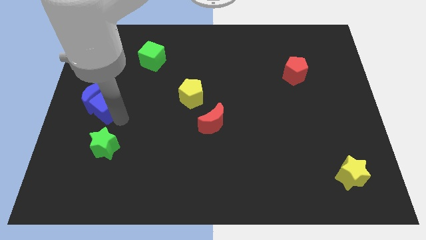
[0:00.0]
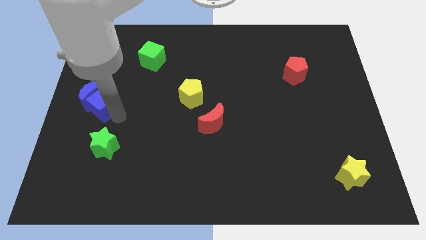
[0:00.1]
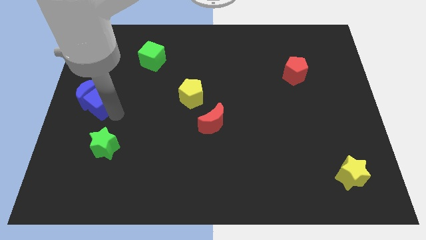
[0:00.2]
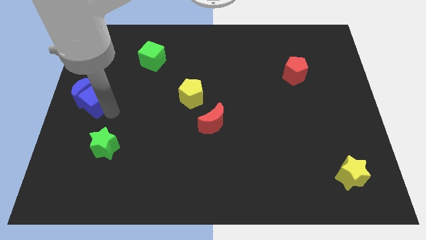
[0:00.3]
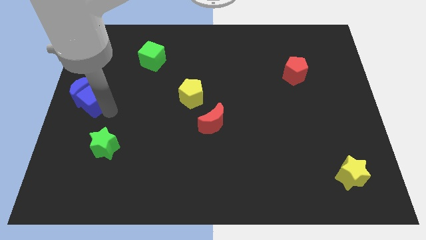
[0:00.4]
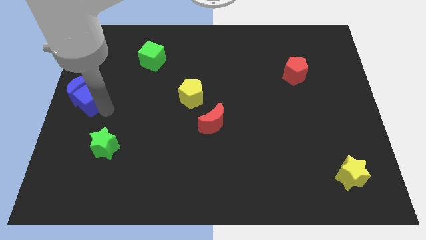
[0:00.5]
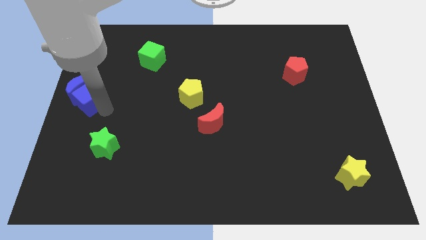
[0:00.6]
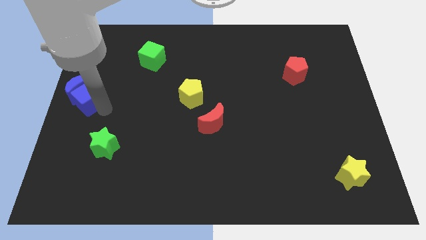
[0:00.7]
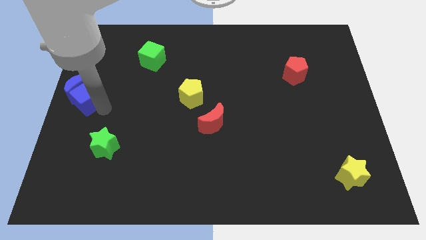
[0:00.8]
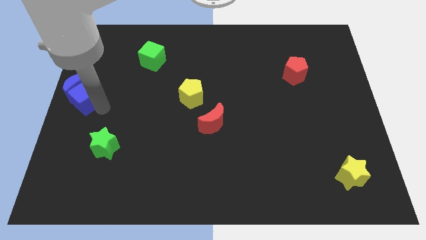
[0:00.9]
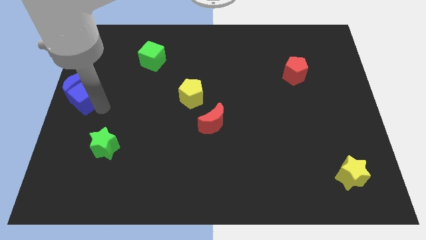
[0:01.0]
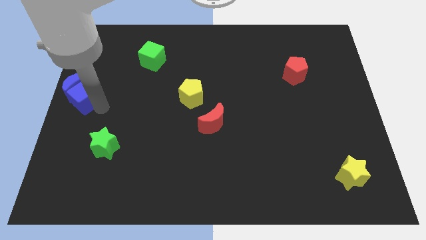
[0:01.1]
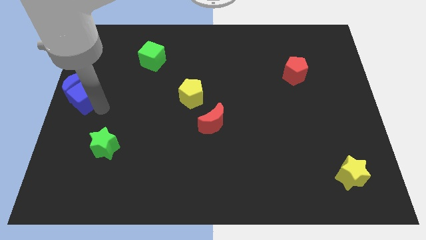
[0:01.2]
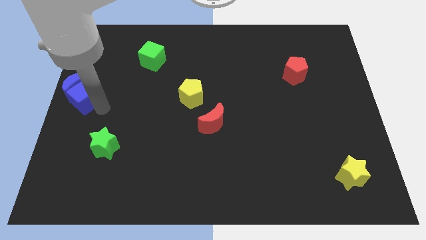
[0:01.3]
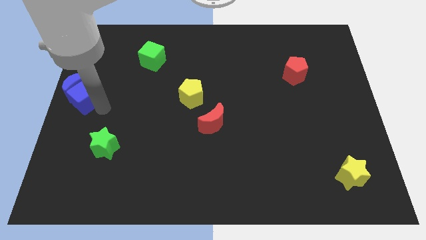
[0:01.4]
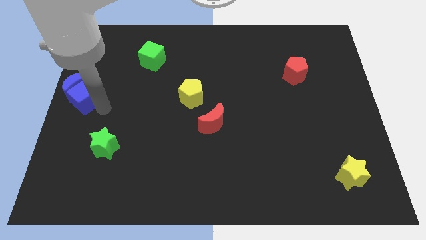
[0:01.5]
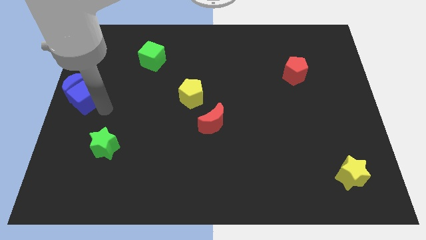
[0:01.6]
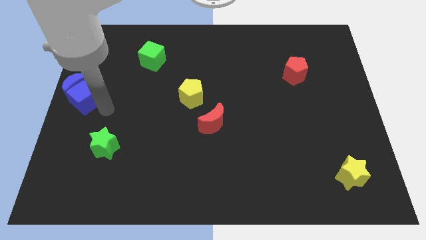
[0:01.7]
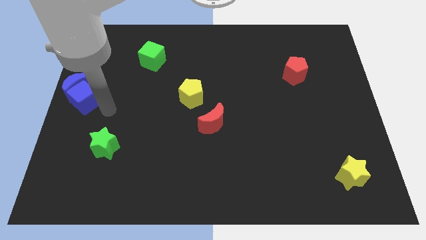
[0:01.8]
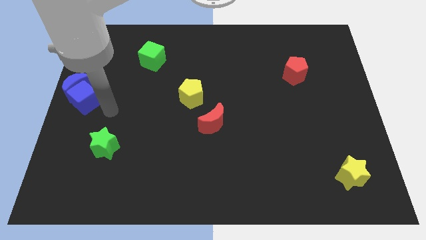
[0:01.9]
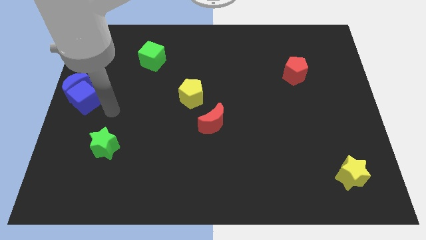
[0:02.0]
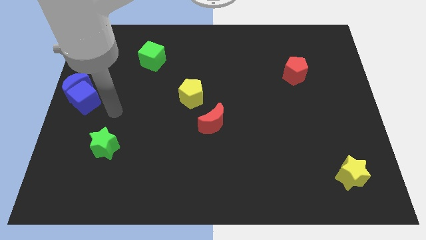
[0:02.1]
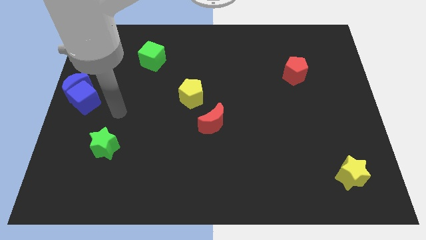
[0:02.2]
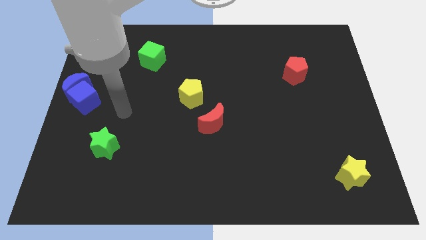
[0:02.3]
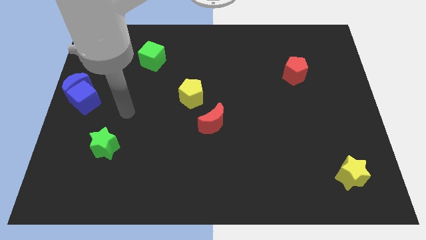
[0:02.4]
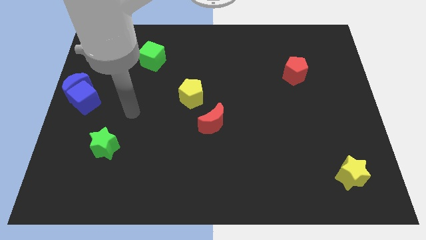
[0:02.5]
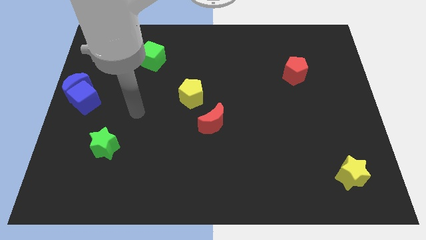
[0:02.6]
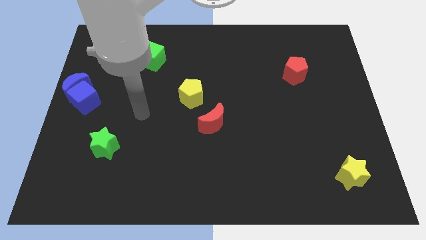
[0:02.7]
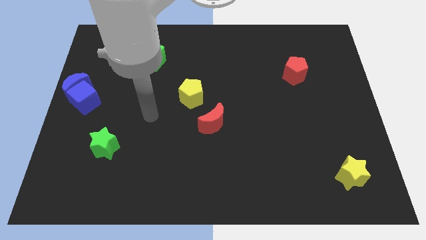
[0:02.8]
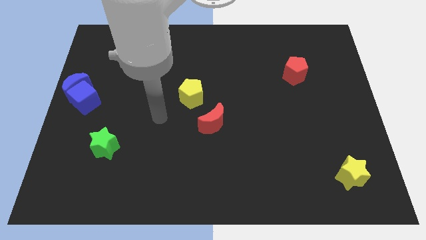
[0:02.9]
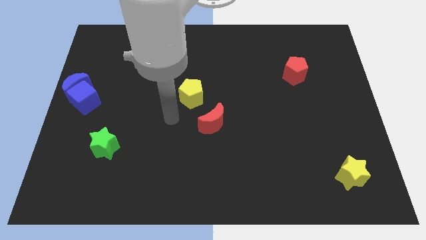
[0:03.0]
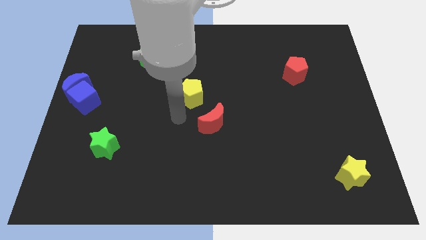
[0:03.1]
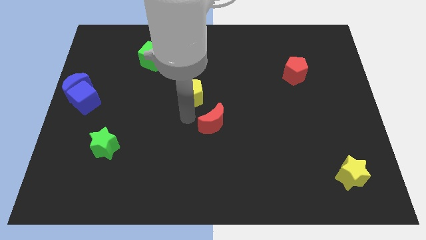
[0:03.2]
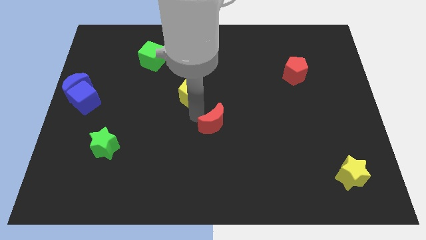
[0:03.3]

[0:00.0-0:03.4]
place the blue blocks at the center left side

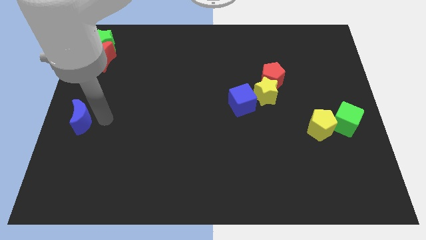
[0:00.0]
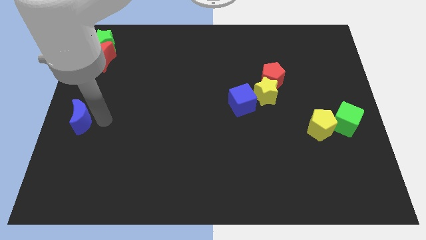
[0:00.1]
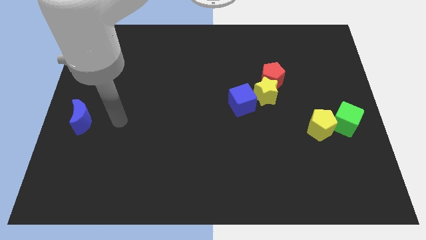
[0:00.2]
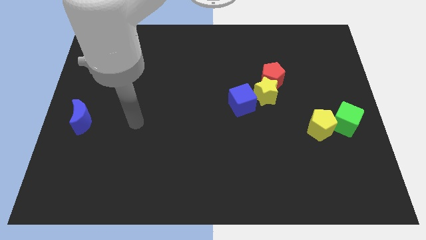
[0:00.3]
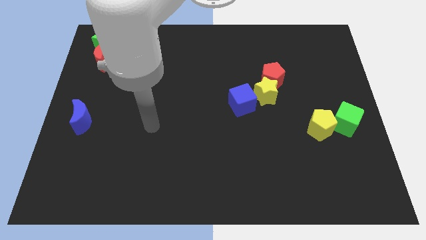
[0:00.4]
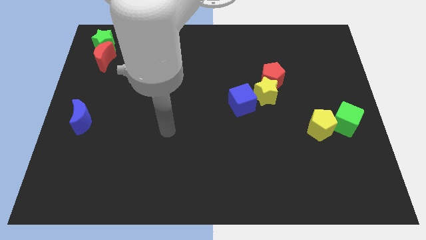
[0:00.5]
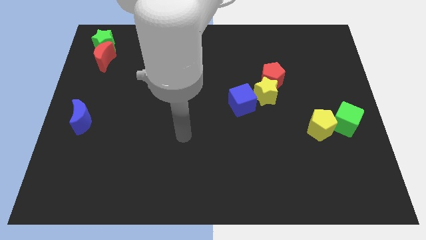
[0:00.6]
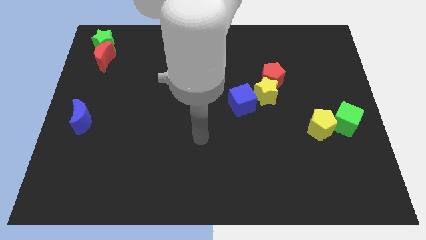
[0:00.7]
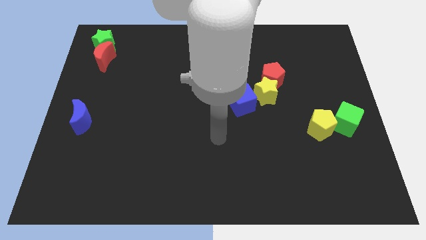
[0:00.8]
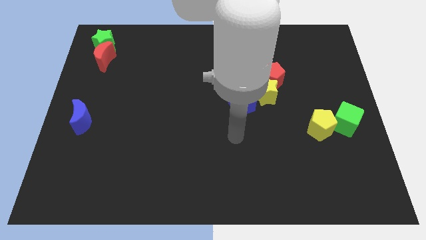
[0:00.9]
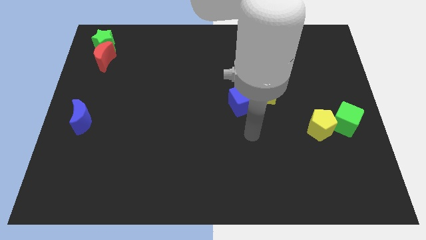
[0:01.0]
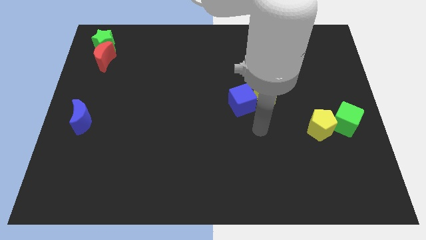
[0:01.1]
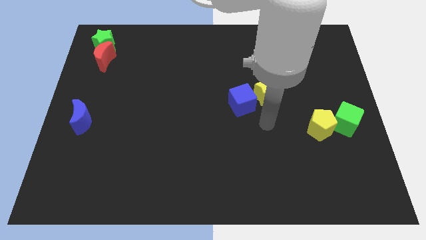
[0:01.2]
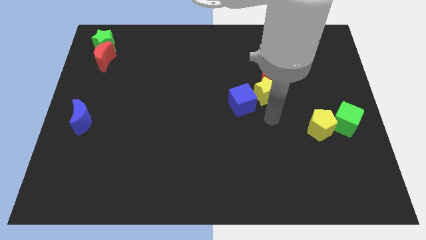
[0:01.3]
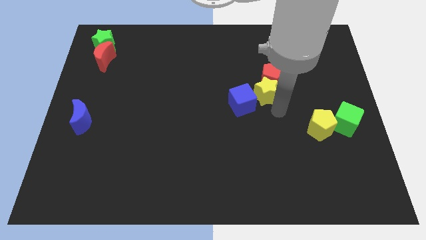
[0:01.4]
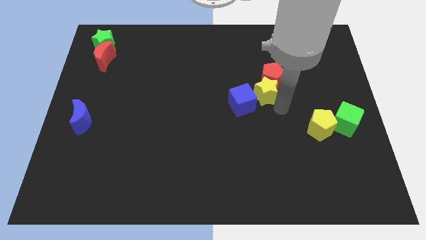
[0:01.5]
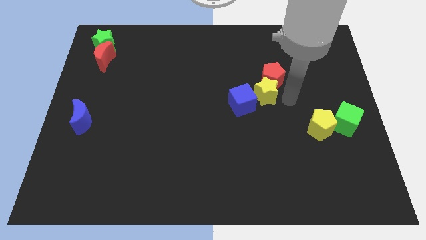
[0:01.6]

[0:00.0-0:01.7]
place your hand in between red pentagon and yellow pentagon

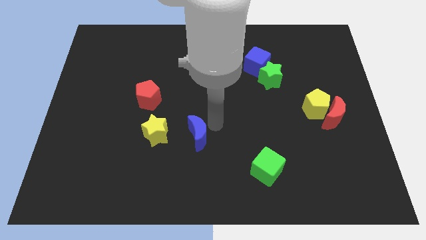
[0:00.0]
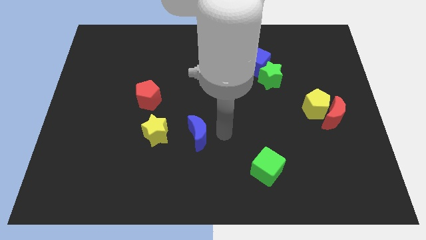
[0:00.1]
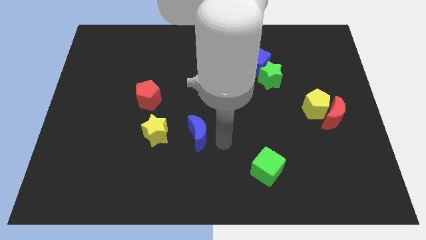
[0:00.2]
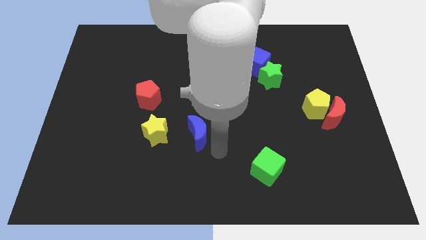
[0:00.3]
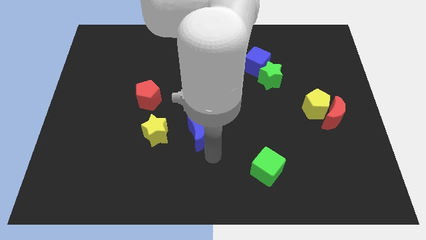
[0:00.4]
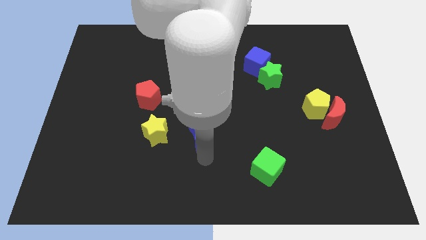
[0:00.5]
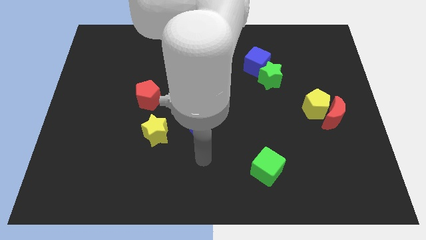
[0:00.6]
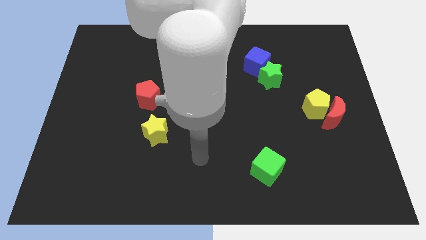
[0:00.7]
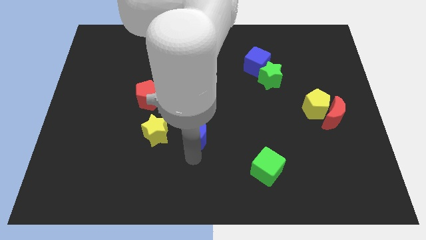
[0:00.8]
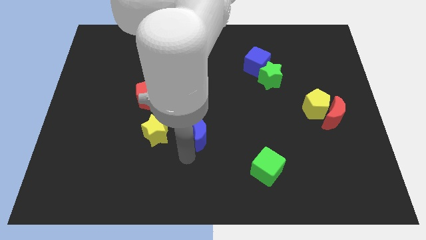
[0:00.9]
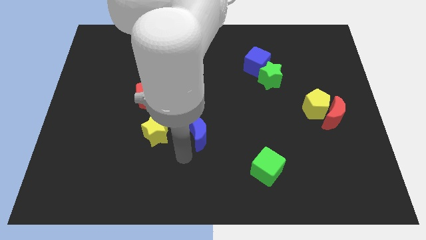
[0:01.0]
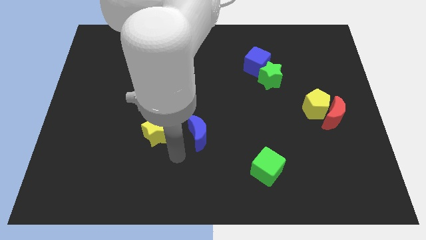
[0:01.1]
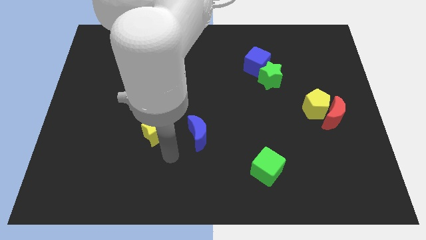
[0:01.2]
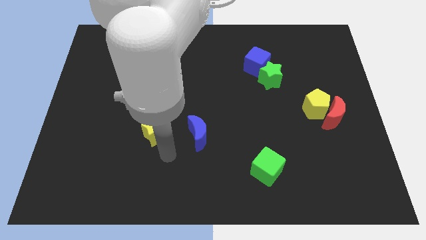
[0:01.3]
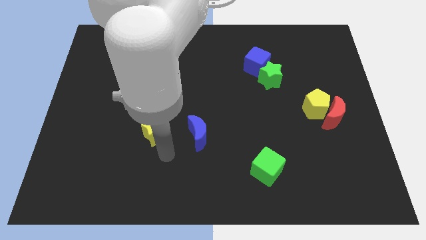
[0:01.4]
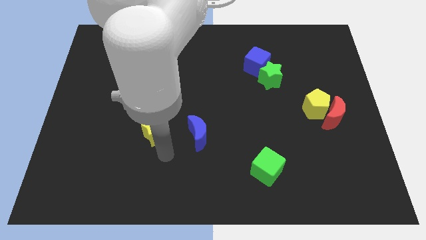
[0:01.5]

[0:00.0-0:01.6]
move your arm towards the yellow star

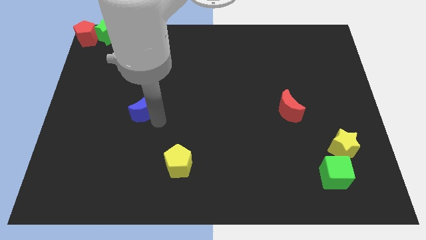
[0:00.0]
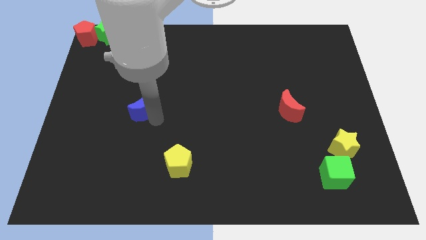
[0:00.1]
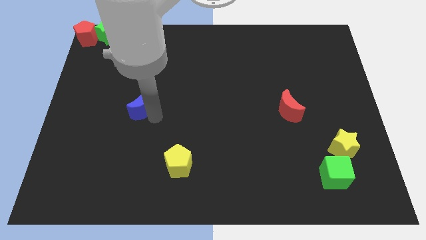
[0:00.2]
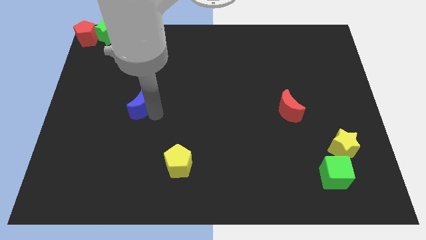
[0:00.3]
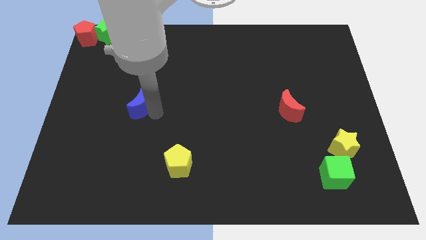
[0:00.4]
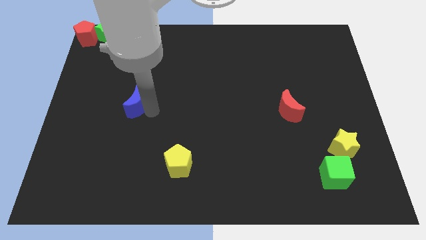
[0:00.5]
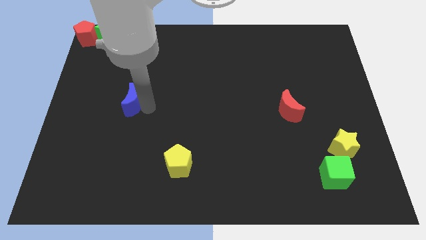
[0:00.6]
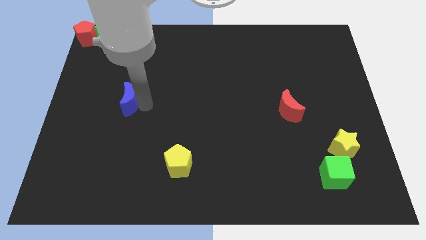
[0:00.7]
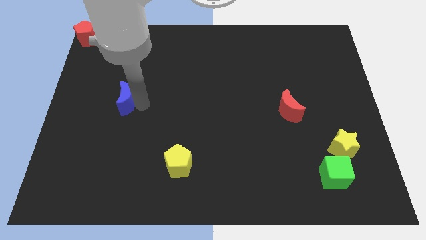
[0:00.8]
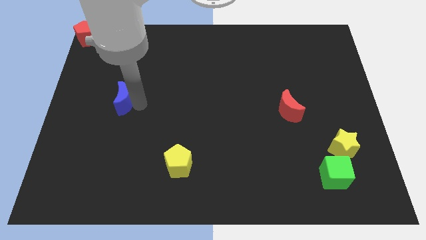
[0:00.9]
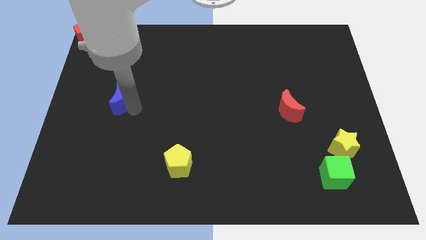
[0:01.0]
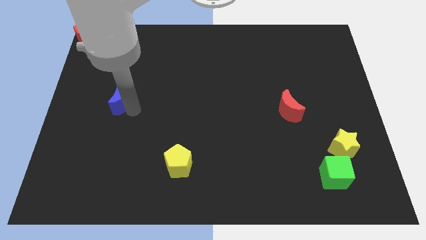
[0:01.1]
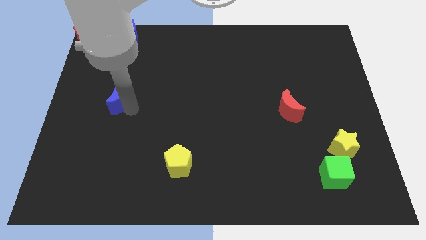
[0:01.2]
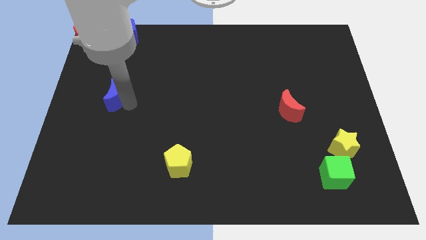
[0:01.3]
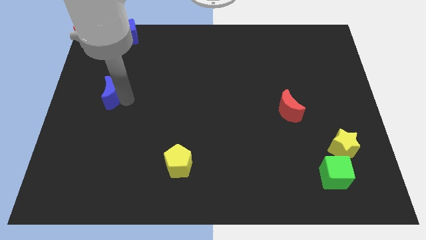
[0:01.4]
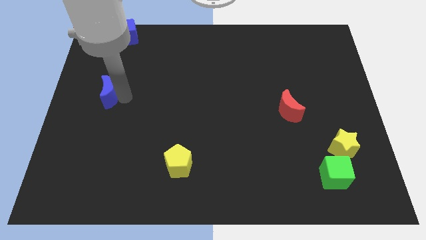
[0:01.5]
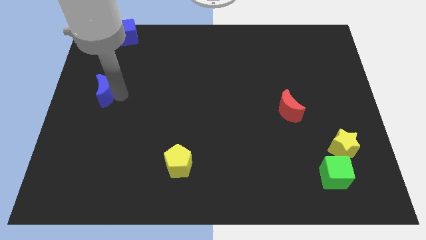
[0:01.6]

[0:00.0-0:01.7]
push the blue crescent towards the left side of the board

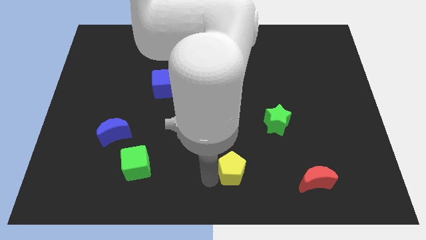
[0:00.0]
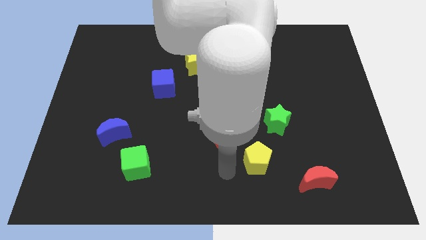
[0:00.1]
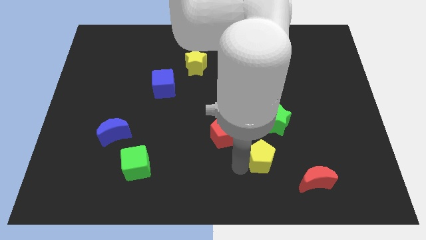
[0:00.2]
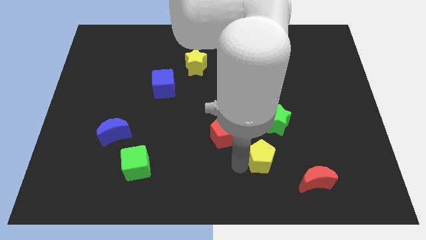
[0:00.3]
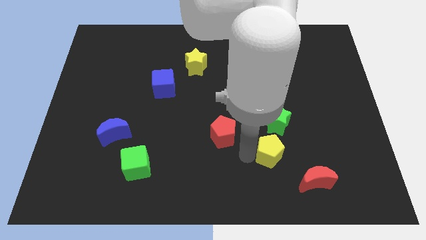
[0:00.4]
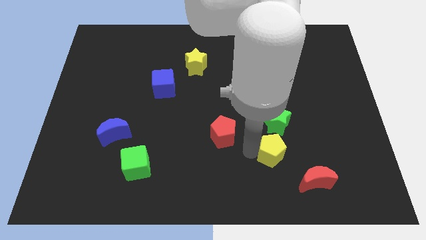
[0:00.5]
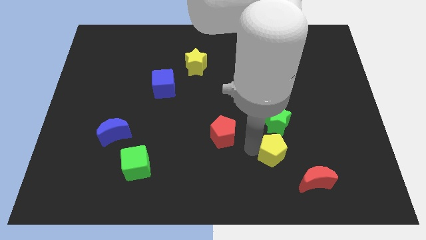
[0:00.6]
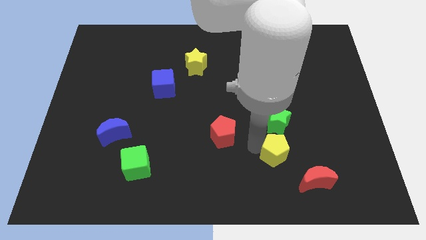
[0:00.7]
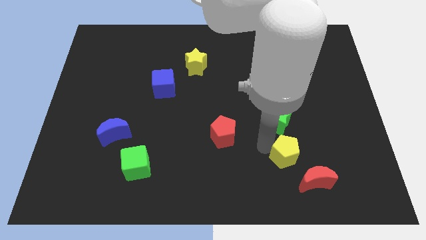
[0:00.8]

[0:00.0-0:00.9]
push the yellow pentagon to the bottom of the green star
